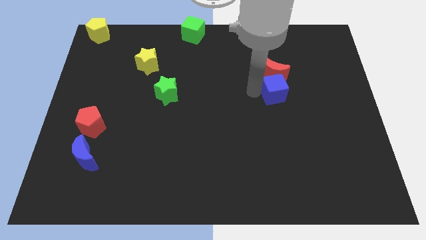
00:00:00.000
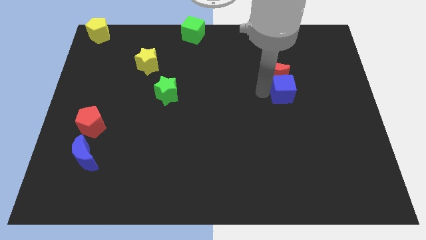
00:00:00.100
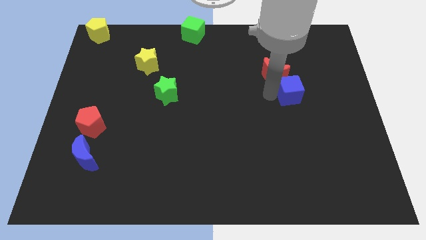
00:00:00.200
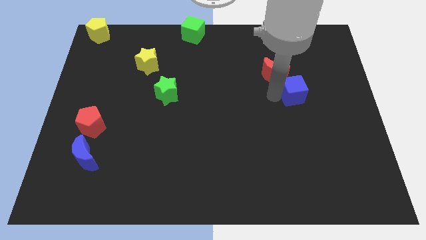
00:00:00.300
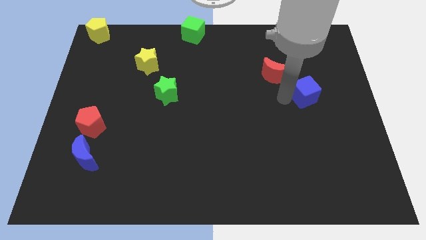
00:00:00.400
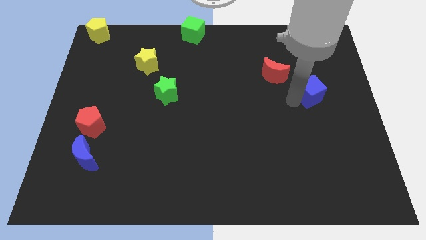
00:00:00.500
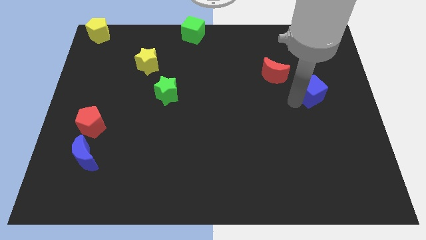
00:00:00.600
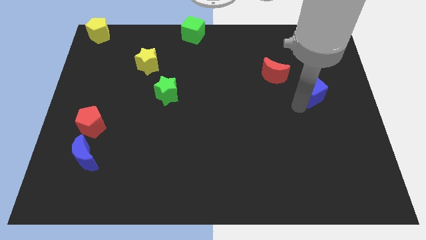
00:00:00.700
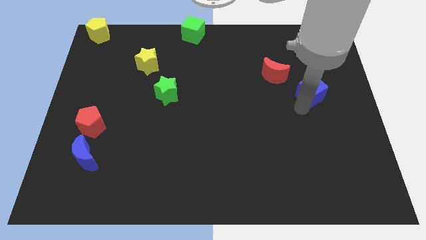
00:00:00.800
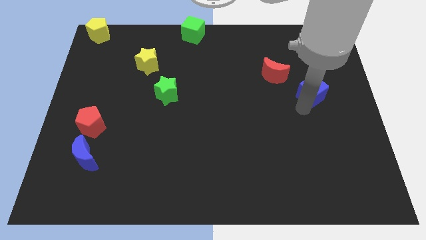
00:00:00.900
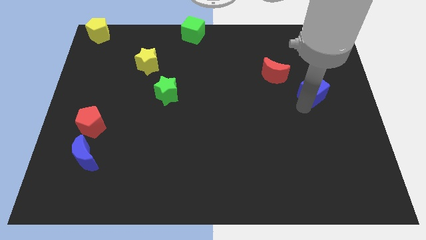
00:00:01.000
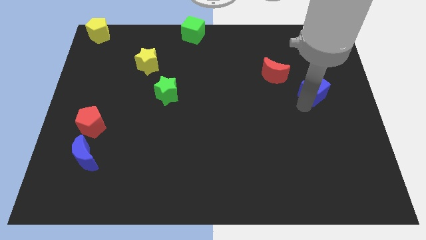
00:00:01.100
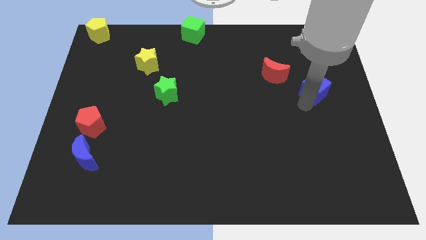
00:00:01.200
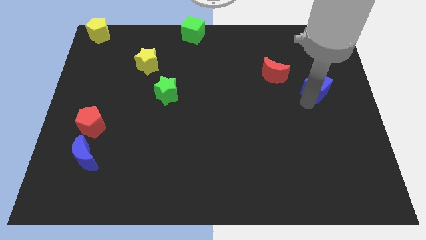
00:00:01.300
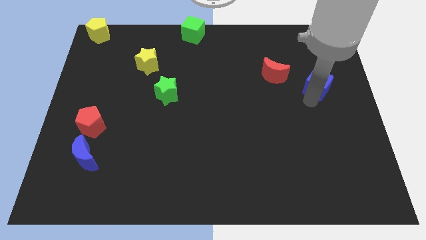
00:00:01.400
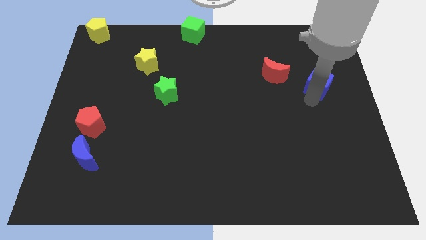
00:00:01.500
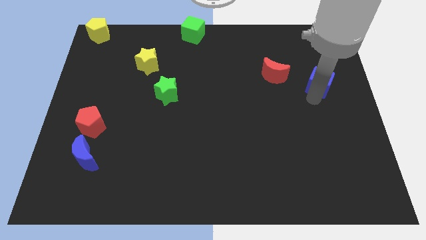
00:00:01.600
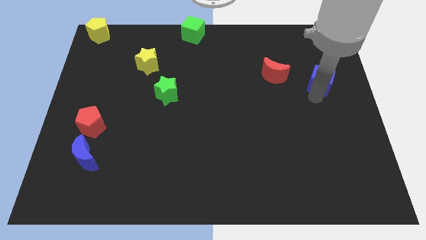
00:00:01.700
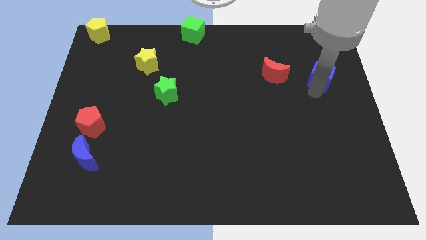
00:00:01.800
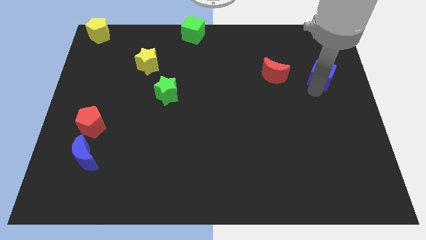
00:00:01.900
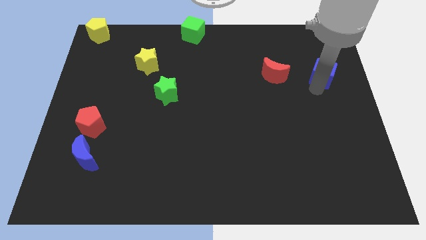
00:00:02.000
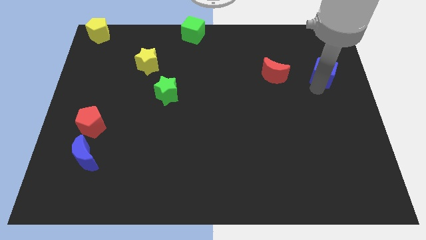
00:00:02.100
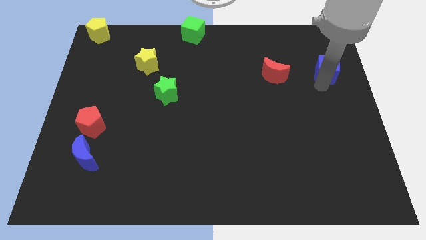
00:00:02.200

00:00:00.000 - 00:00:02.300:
place the blue cube right to the red moon

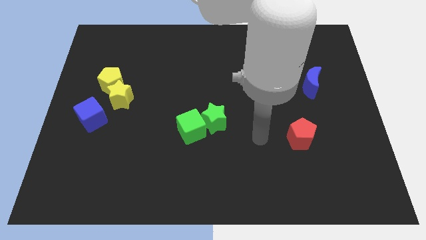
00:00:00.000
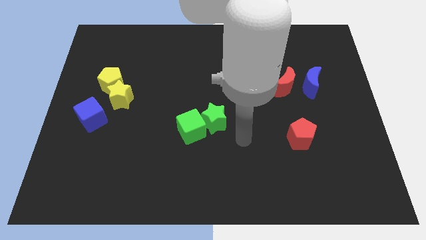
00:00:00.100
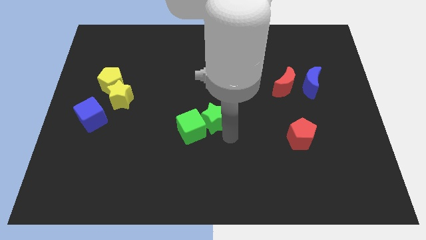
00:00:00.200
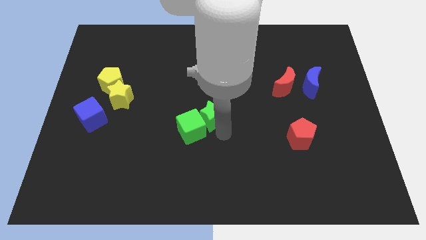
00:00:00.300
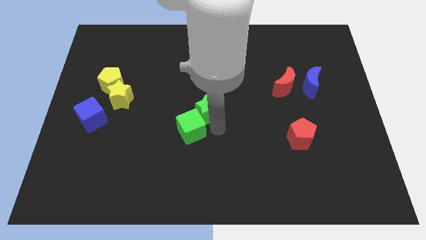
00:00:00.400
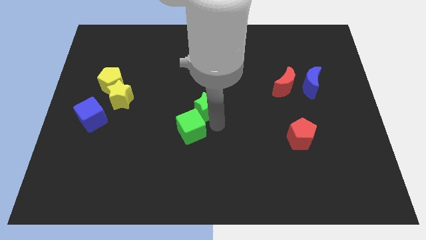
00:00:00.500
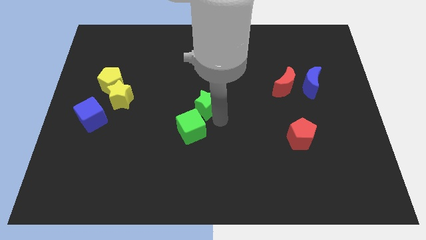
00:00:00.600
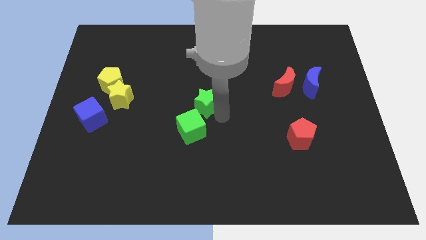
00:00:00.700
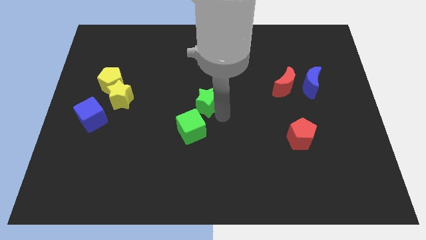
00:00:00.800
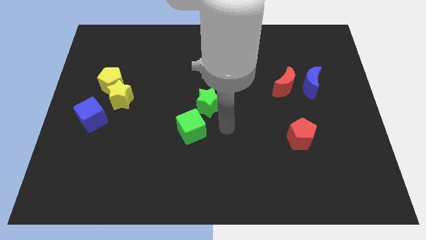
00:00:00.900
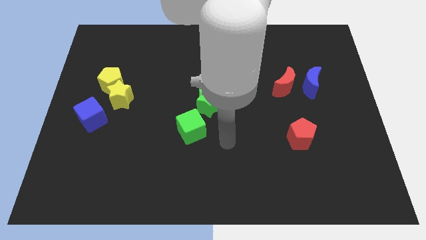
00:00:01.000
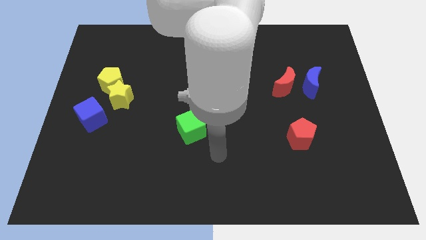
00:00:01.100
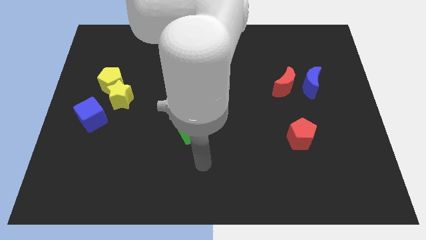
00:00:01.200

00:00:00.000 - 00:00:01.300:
move the green star to the center of the board

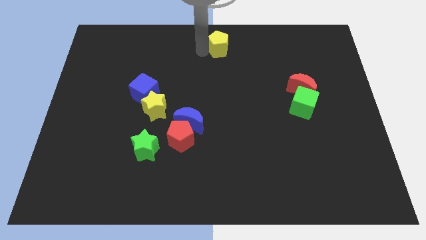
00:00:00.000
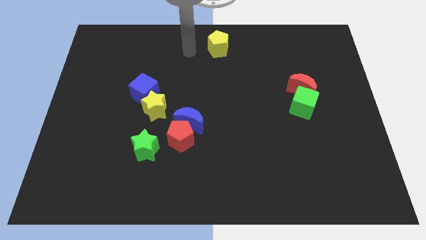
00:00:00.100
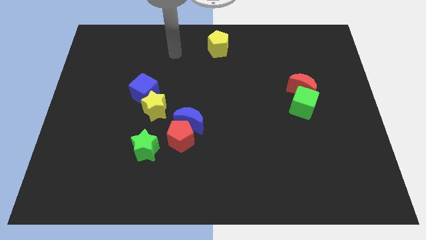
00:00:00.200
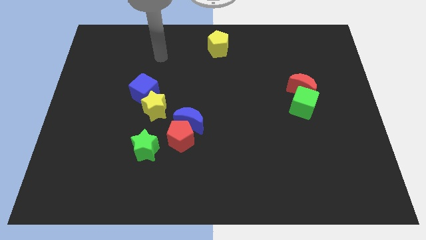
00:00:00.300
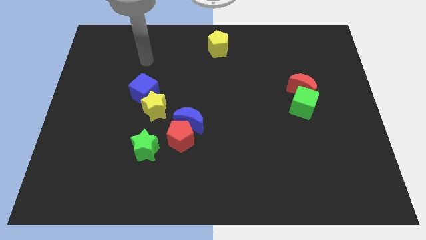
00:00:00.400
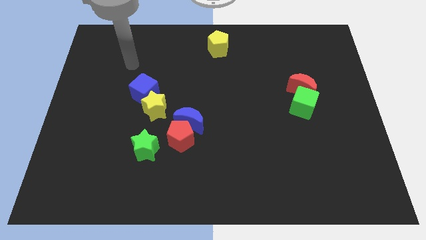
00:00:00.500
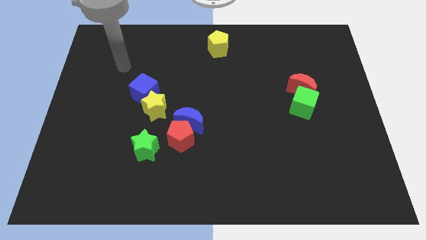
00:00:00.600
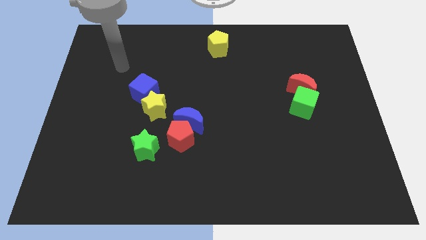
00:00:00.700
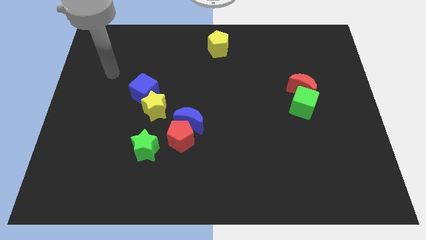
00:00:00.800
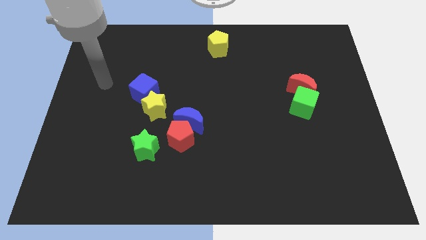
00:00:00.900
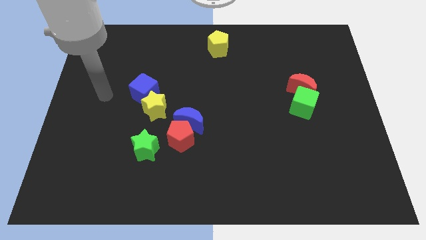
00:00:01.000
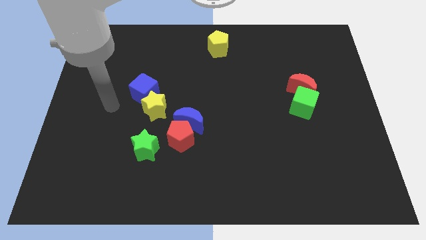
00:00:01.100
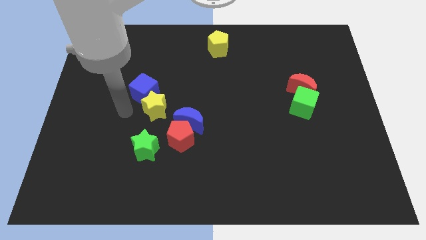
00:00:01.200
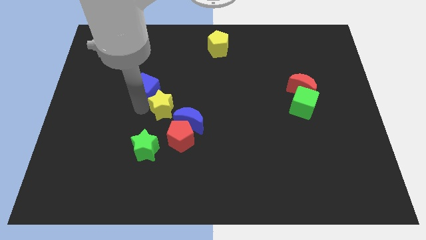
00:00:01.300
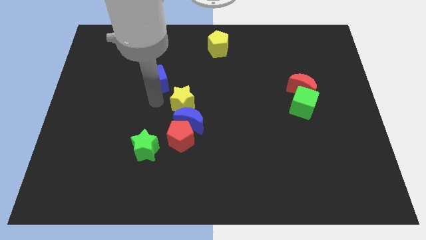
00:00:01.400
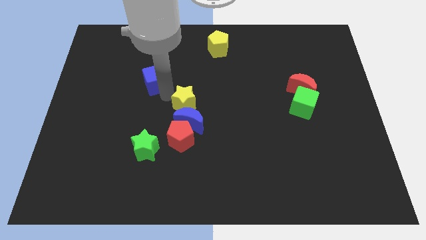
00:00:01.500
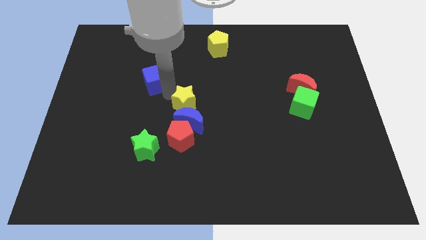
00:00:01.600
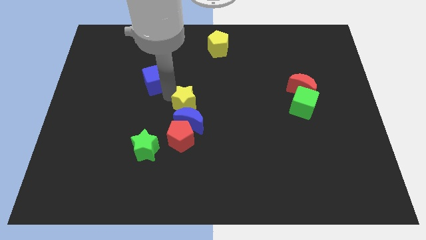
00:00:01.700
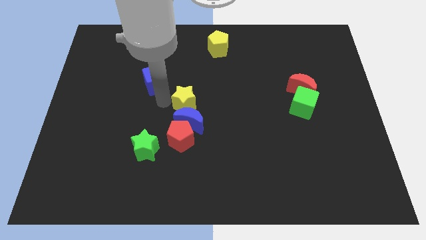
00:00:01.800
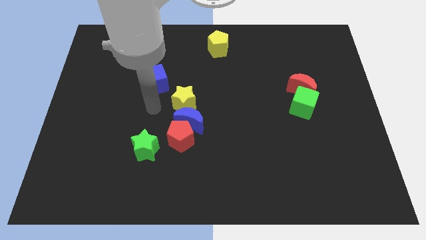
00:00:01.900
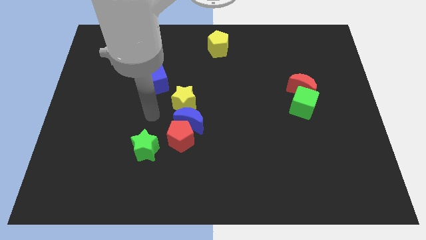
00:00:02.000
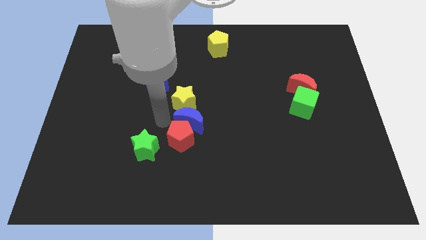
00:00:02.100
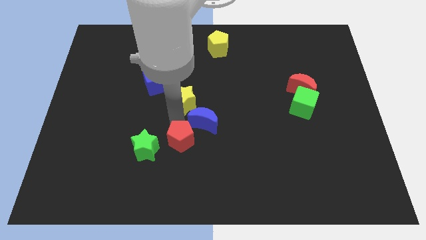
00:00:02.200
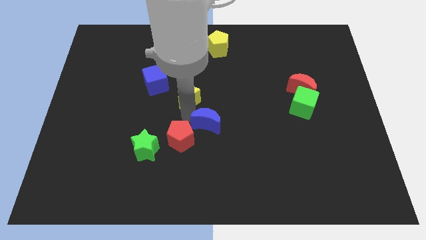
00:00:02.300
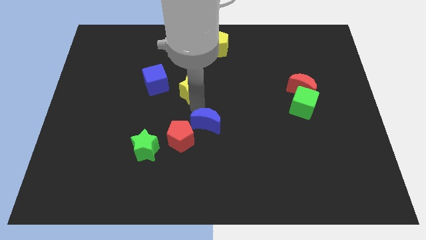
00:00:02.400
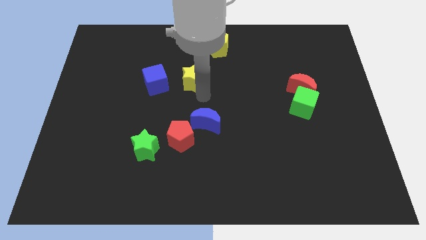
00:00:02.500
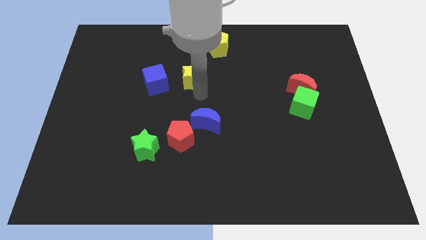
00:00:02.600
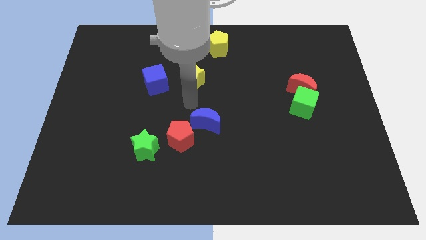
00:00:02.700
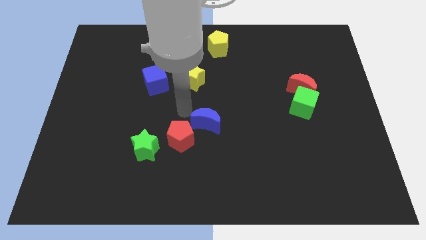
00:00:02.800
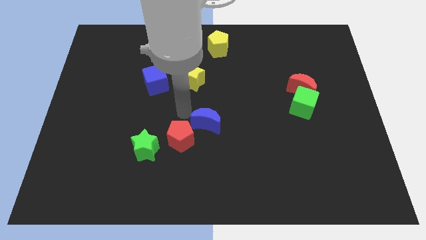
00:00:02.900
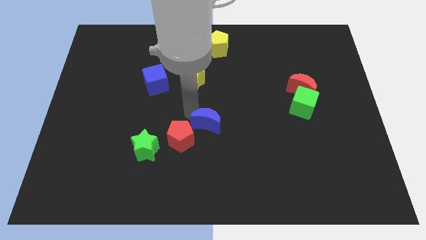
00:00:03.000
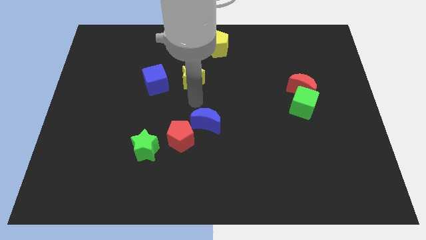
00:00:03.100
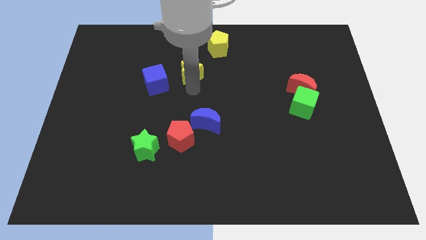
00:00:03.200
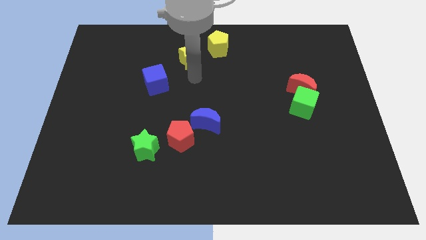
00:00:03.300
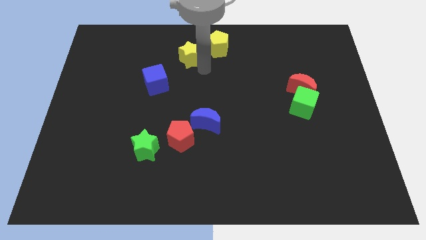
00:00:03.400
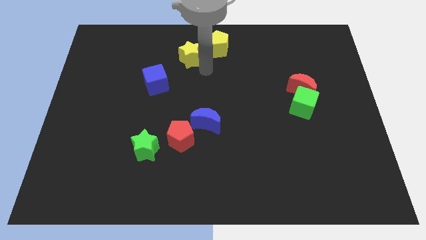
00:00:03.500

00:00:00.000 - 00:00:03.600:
put the yellow star in between the blue cubeb and yellow pentagon

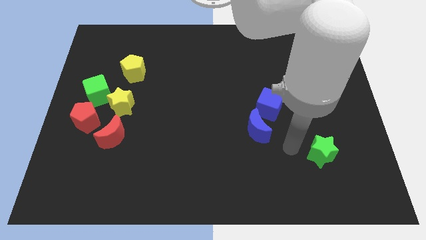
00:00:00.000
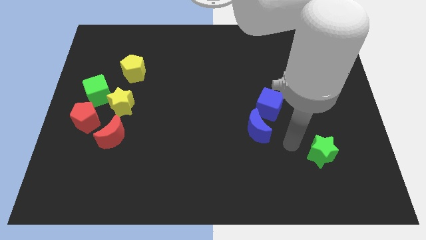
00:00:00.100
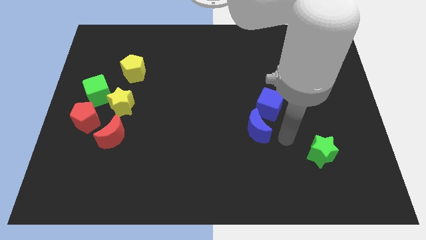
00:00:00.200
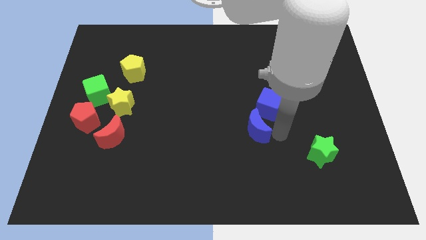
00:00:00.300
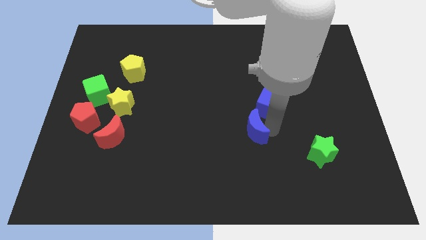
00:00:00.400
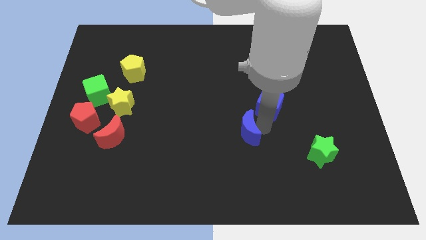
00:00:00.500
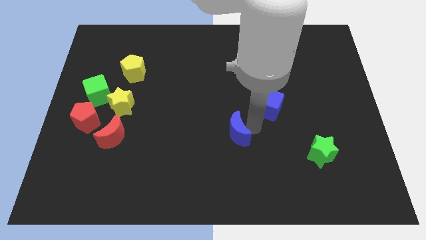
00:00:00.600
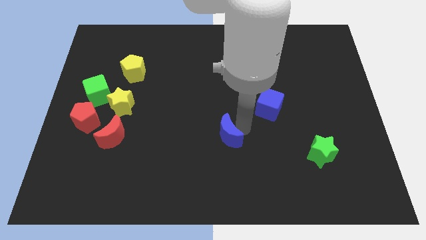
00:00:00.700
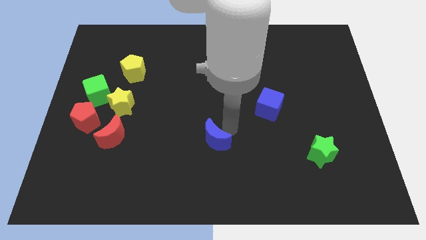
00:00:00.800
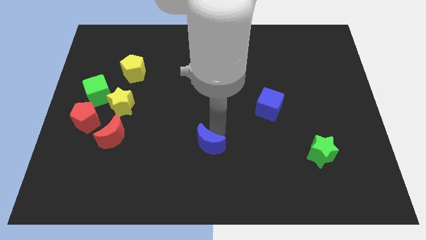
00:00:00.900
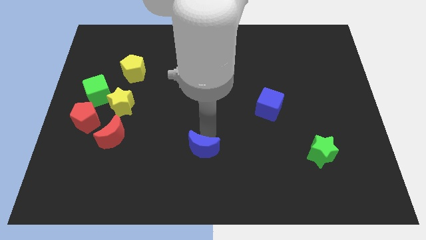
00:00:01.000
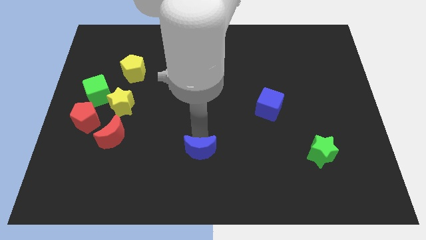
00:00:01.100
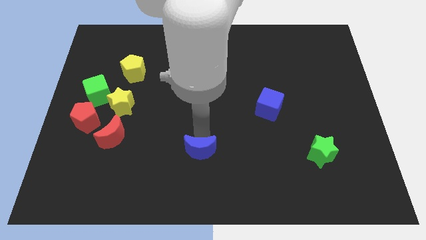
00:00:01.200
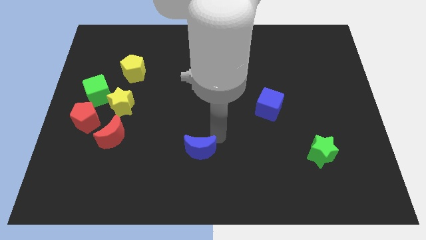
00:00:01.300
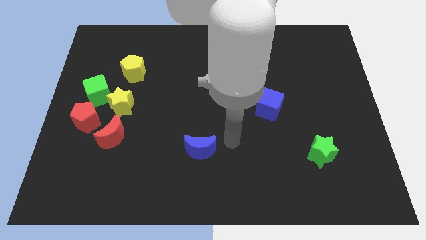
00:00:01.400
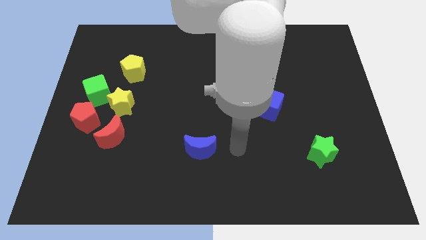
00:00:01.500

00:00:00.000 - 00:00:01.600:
separate the blue moon from blue cube

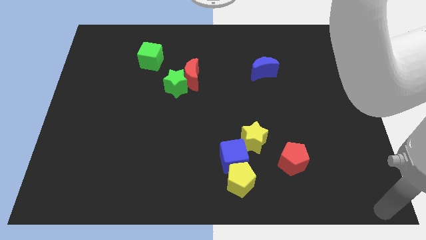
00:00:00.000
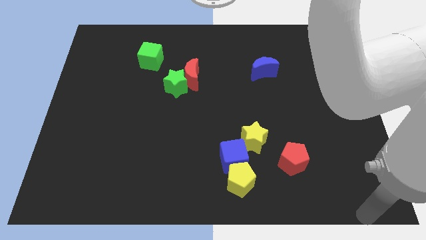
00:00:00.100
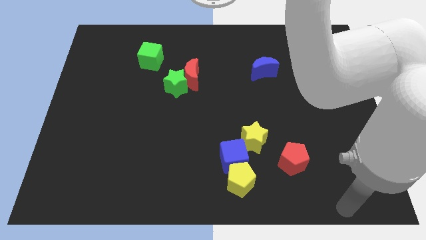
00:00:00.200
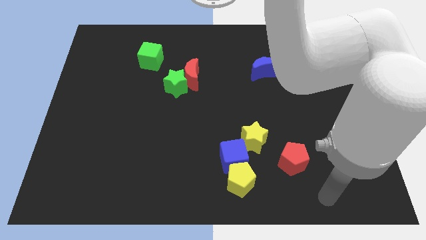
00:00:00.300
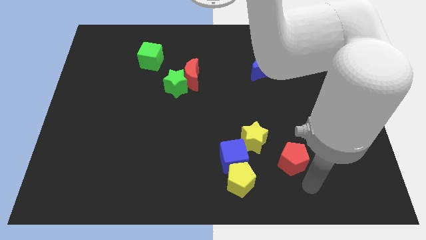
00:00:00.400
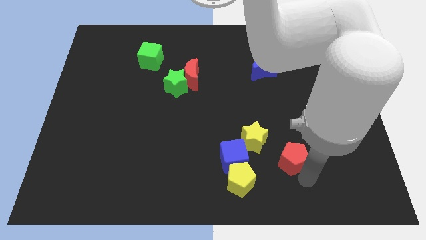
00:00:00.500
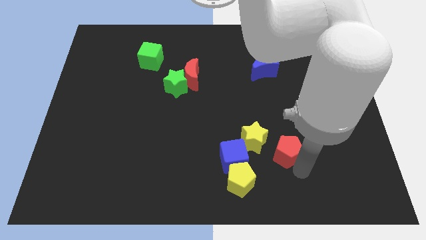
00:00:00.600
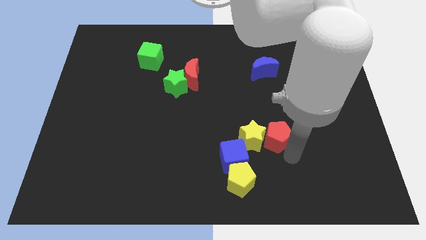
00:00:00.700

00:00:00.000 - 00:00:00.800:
tap red pentagon on its bottom
